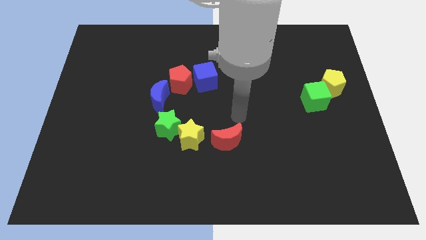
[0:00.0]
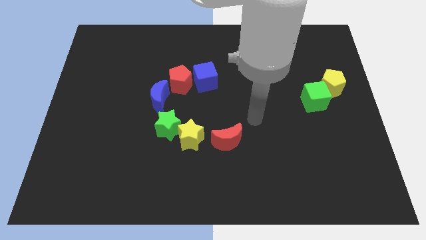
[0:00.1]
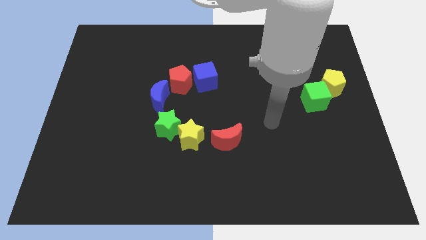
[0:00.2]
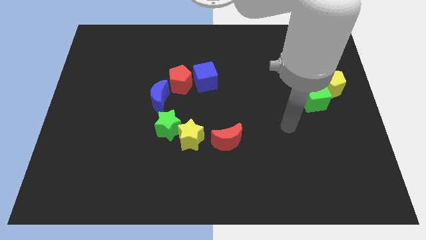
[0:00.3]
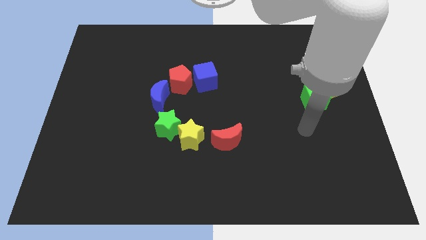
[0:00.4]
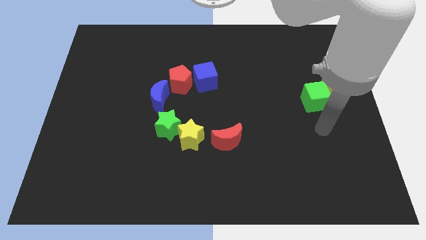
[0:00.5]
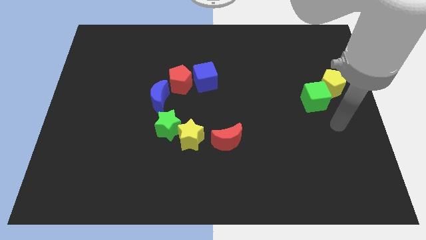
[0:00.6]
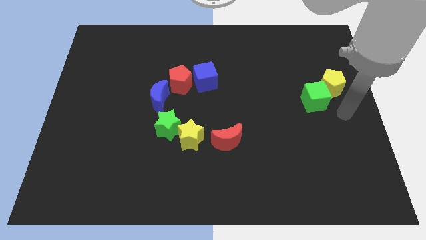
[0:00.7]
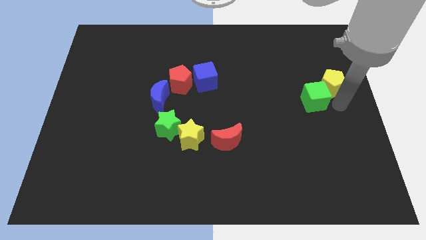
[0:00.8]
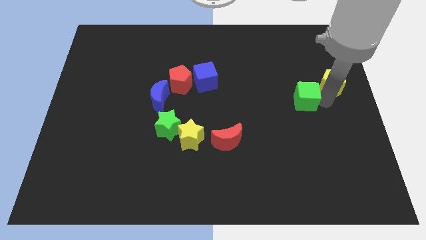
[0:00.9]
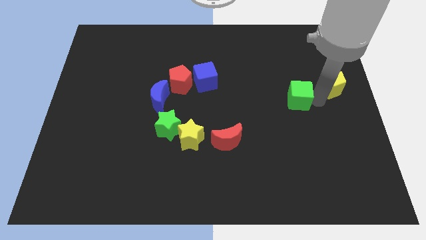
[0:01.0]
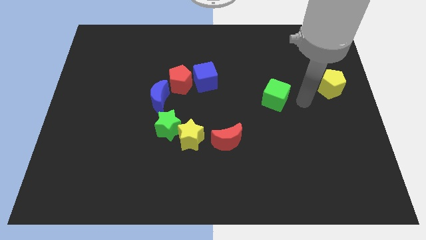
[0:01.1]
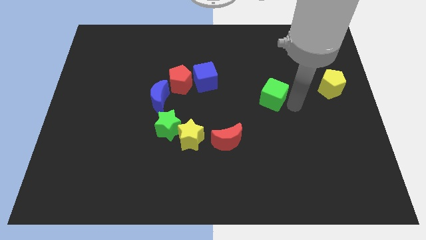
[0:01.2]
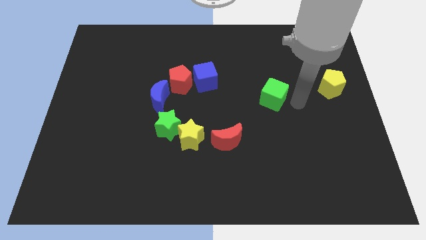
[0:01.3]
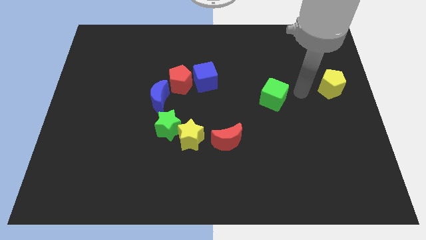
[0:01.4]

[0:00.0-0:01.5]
place your arm in between the green cube and the yellow pentagon

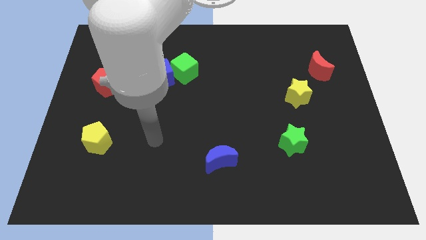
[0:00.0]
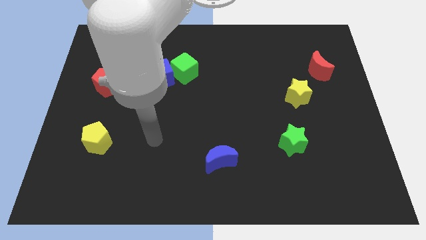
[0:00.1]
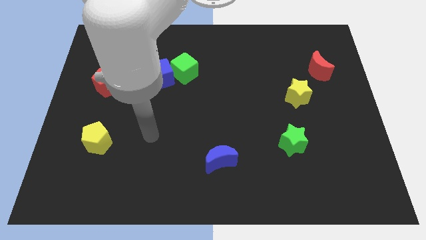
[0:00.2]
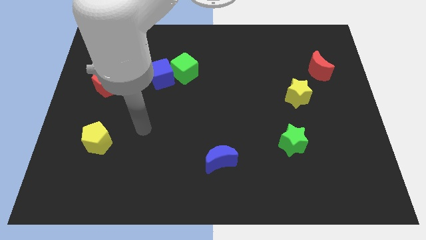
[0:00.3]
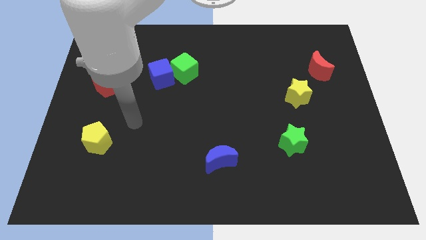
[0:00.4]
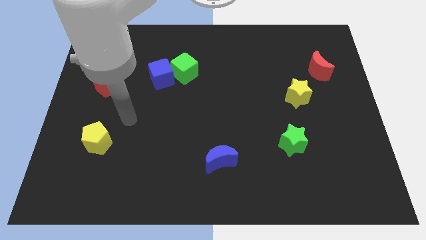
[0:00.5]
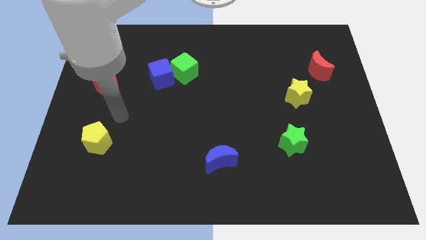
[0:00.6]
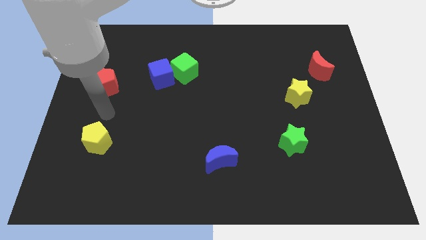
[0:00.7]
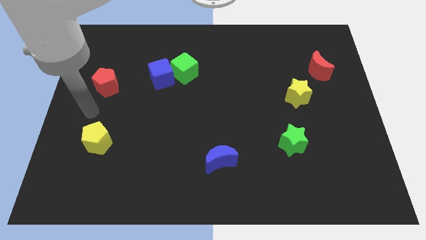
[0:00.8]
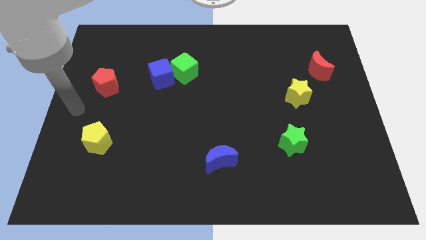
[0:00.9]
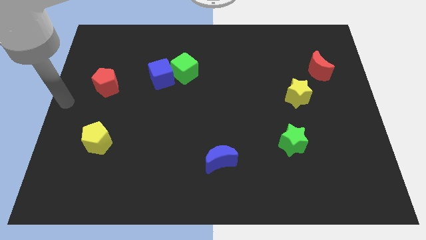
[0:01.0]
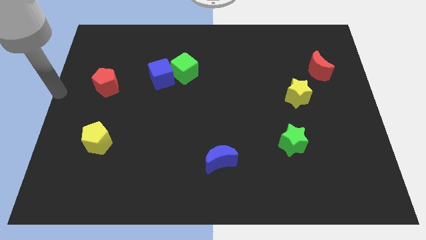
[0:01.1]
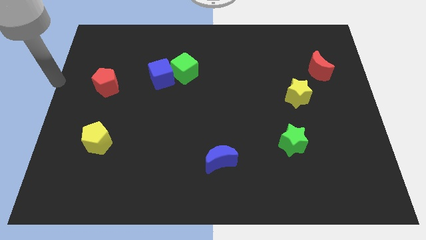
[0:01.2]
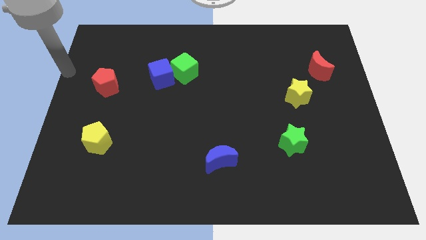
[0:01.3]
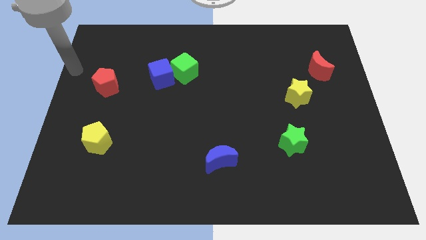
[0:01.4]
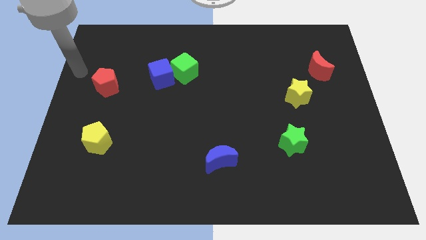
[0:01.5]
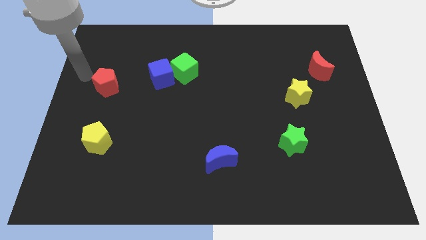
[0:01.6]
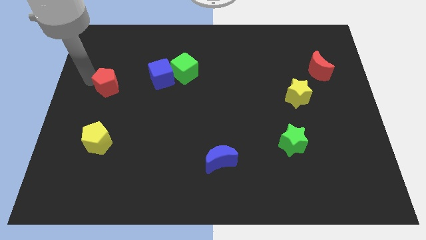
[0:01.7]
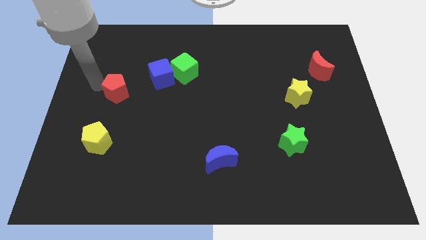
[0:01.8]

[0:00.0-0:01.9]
move your arm towards the left side of the red pentagon

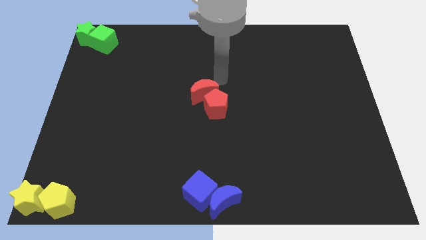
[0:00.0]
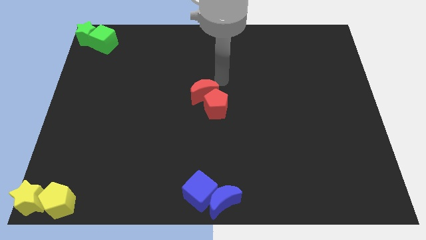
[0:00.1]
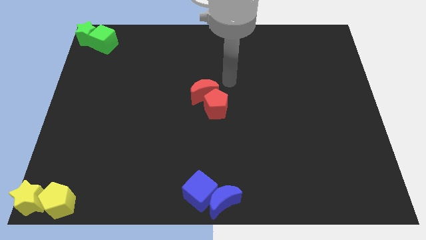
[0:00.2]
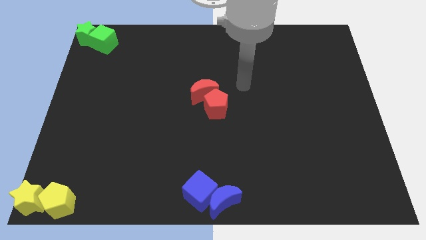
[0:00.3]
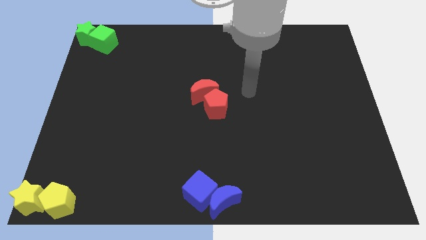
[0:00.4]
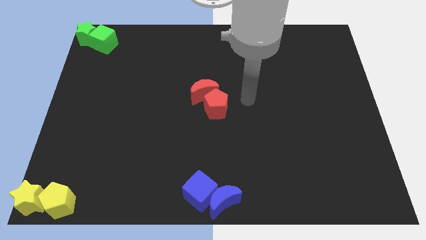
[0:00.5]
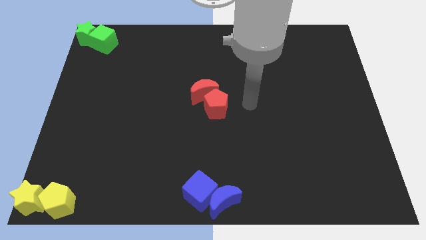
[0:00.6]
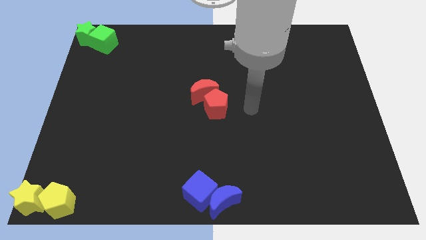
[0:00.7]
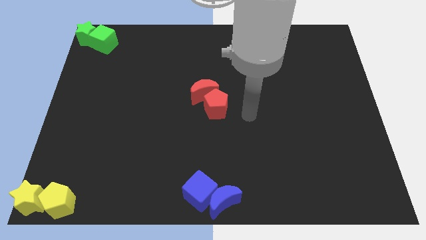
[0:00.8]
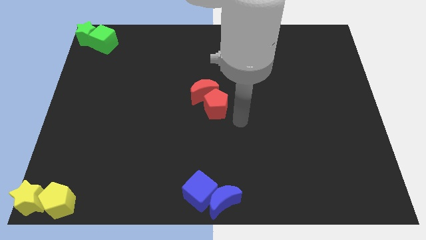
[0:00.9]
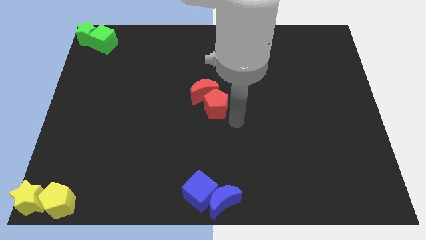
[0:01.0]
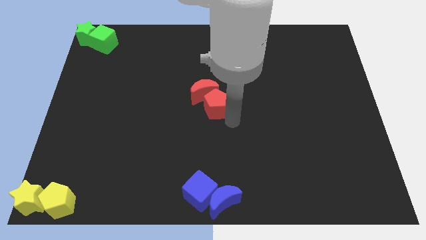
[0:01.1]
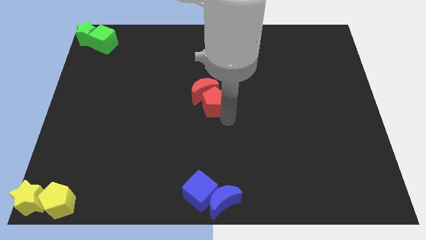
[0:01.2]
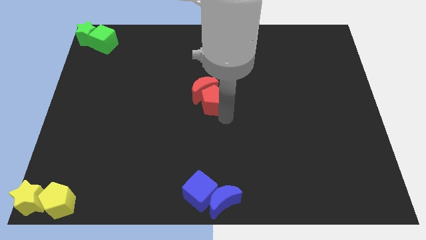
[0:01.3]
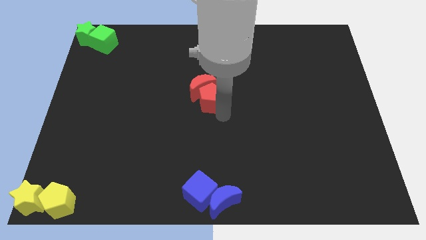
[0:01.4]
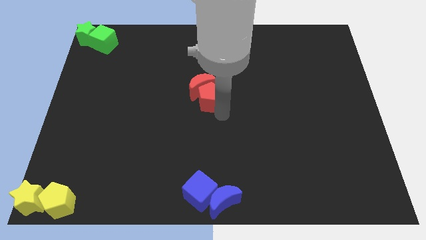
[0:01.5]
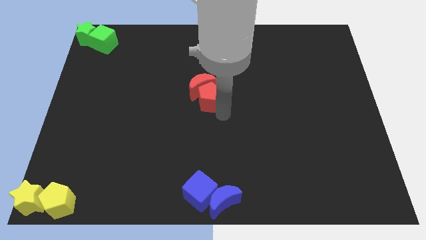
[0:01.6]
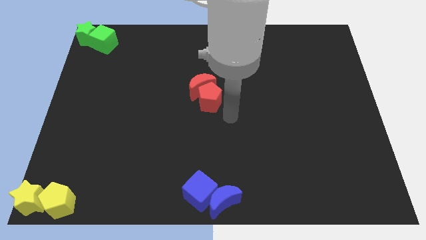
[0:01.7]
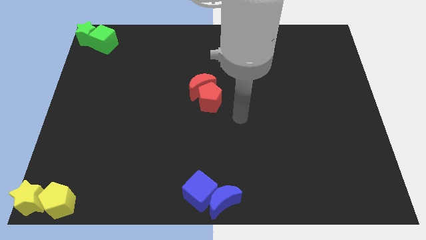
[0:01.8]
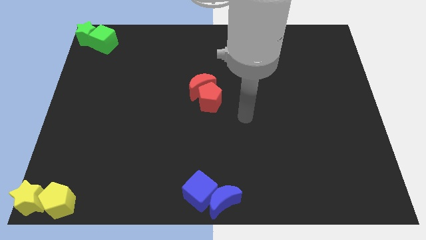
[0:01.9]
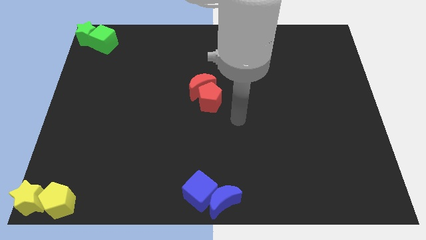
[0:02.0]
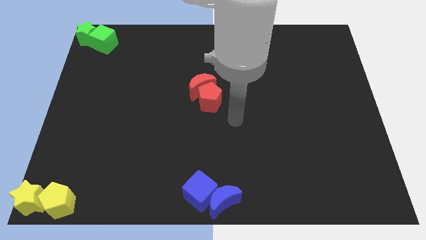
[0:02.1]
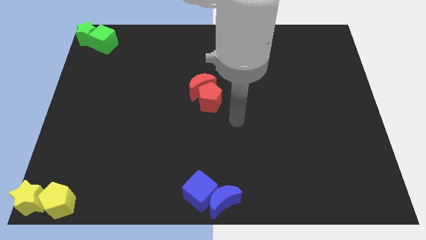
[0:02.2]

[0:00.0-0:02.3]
push red pentagon into red crescent towards the top

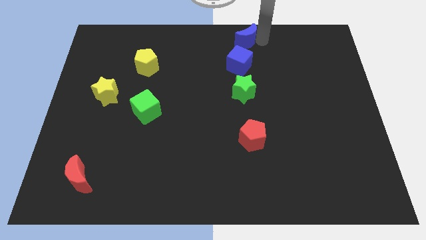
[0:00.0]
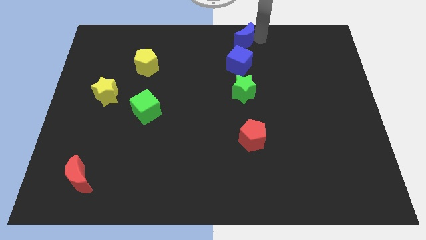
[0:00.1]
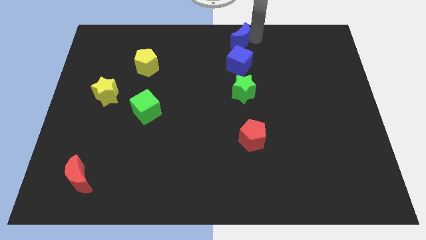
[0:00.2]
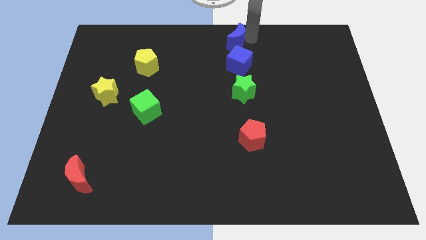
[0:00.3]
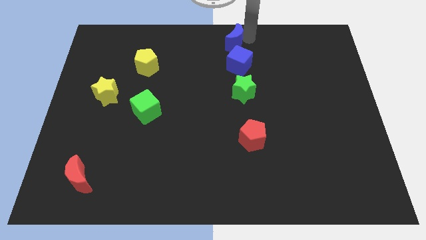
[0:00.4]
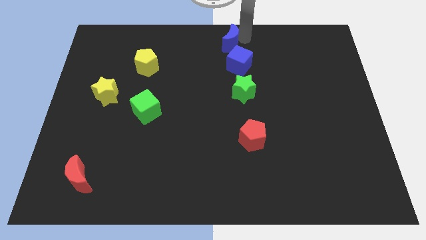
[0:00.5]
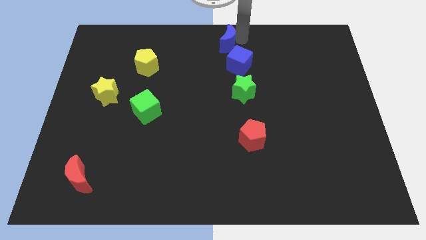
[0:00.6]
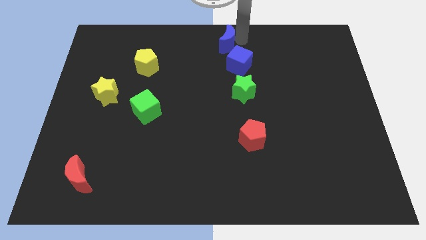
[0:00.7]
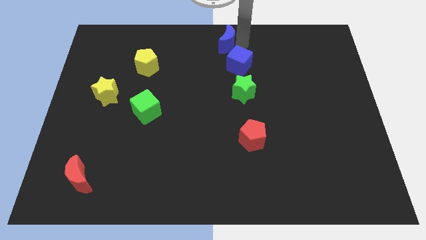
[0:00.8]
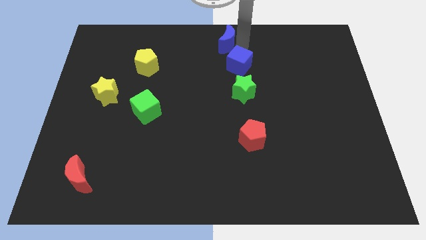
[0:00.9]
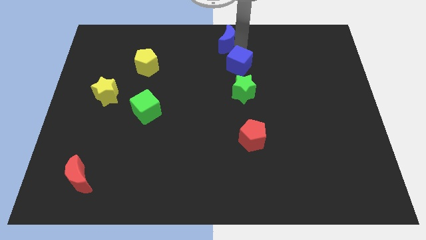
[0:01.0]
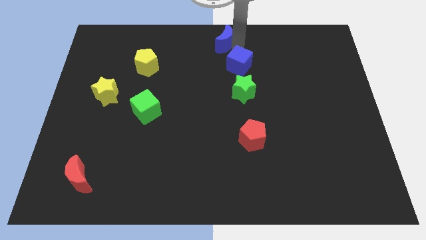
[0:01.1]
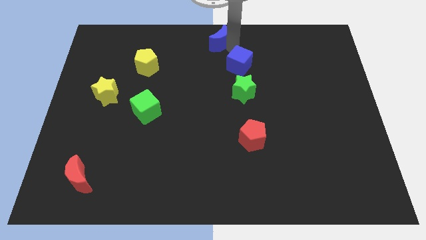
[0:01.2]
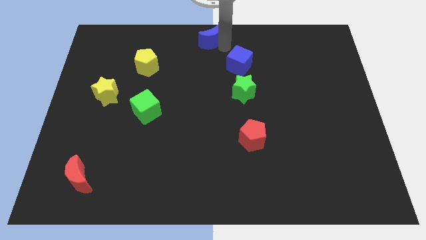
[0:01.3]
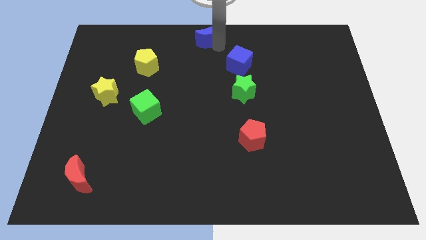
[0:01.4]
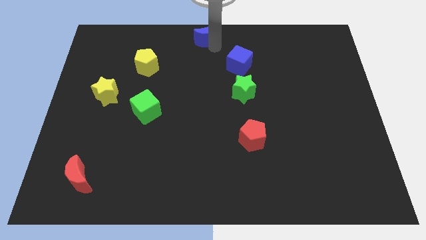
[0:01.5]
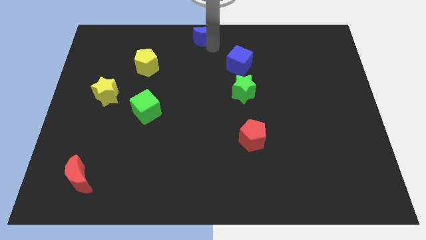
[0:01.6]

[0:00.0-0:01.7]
place the blue moon at the top center of the board

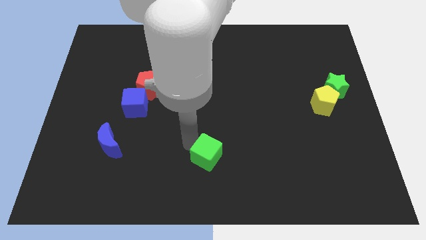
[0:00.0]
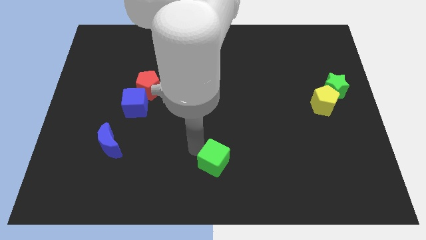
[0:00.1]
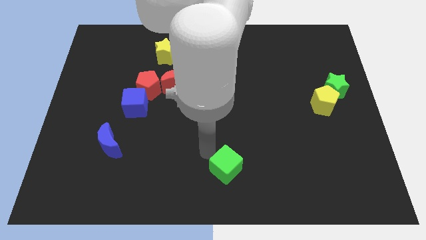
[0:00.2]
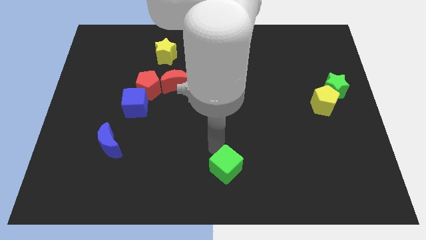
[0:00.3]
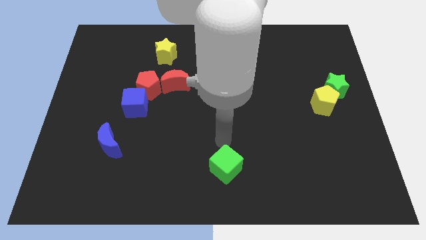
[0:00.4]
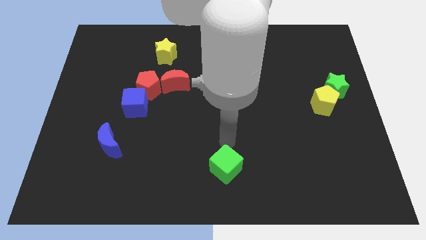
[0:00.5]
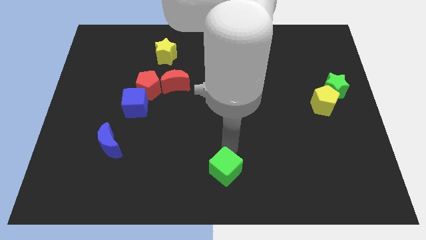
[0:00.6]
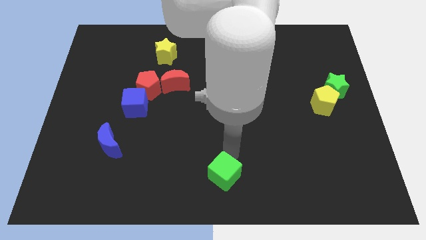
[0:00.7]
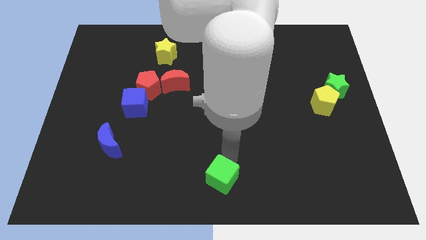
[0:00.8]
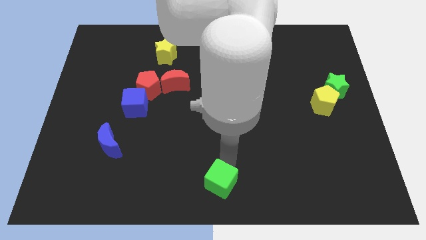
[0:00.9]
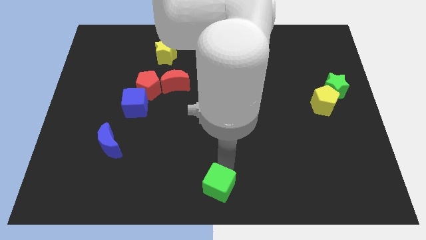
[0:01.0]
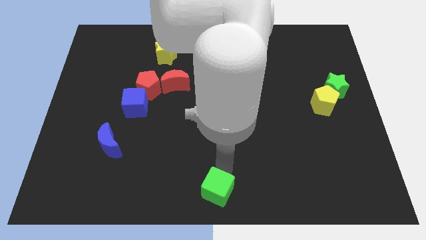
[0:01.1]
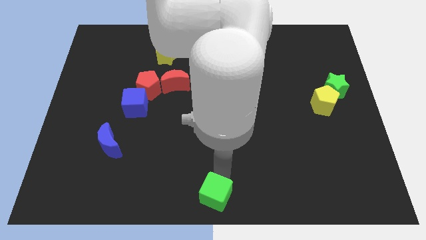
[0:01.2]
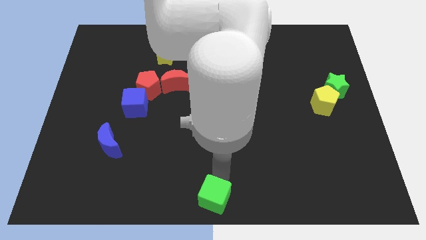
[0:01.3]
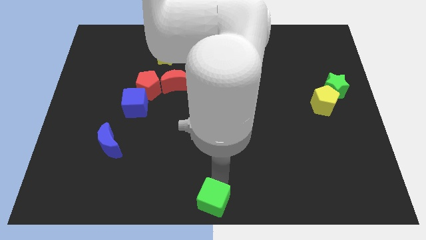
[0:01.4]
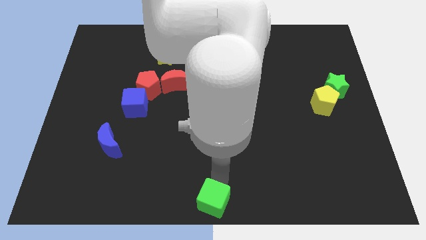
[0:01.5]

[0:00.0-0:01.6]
place the green cube at the bottom center of the board
